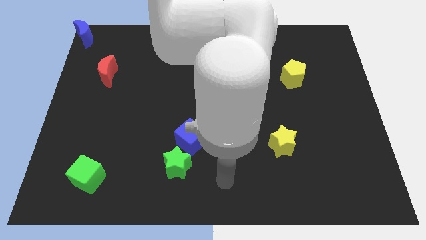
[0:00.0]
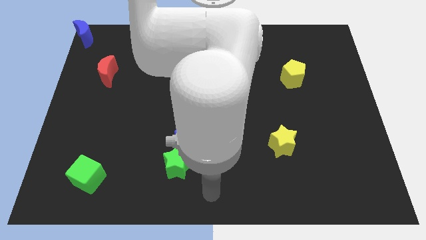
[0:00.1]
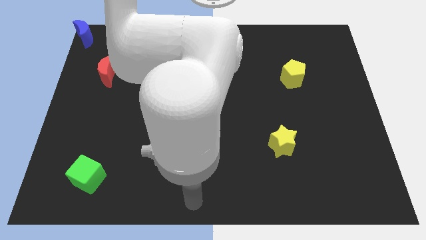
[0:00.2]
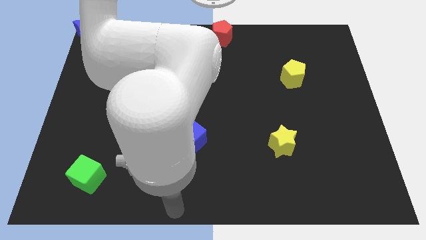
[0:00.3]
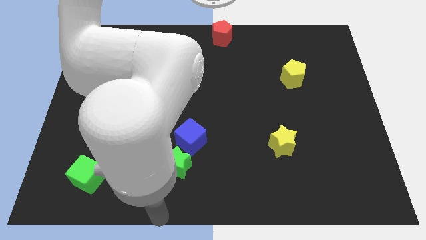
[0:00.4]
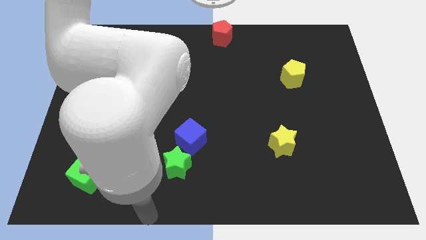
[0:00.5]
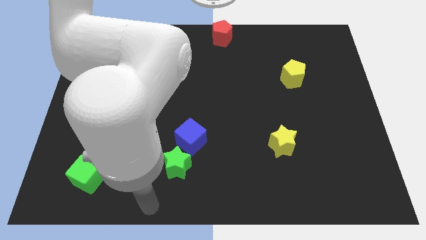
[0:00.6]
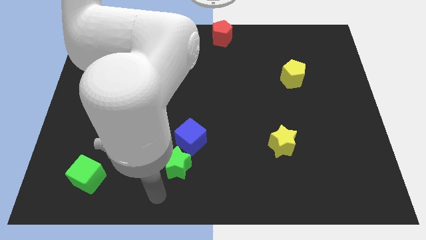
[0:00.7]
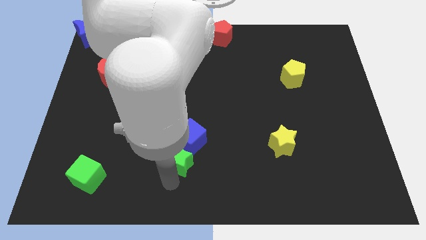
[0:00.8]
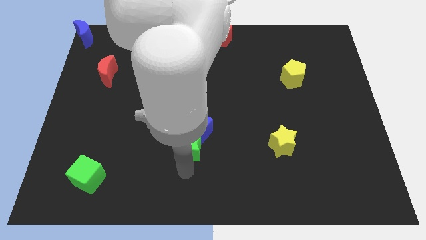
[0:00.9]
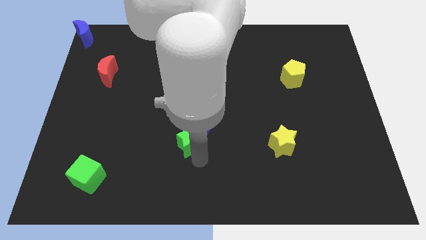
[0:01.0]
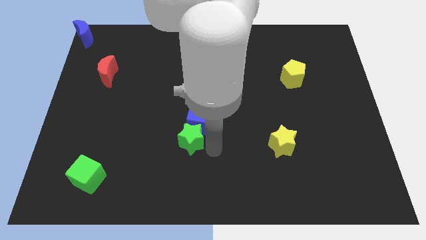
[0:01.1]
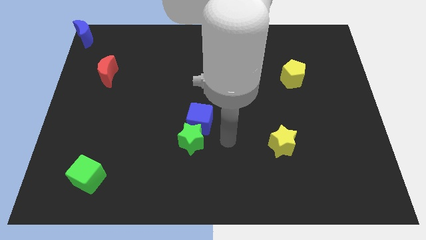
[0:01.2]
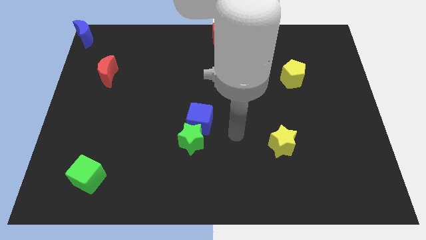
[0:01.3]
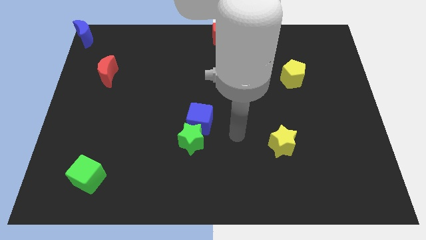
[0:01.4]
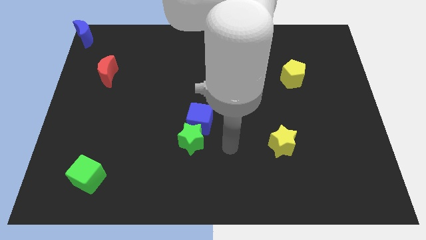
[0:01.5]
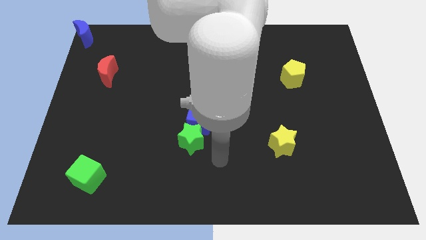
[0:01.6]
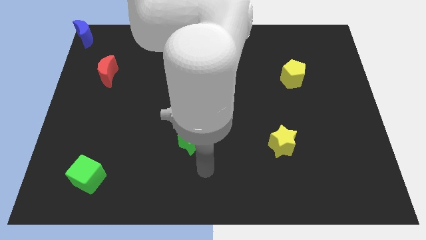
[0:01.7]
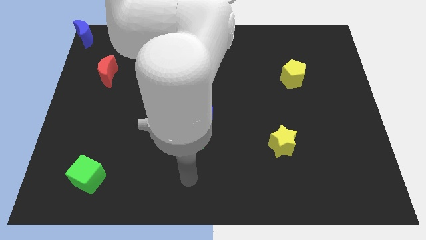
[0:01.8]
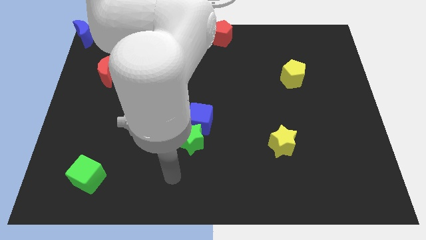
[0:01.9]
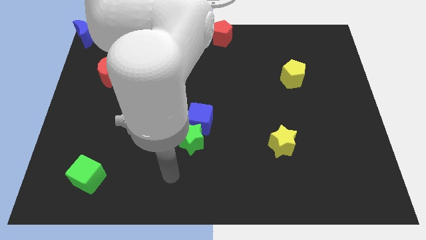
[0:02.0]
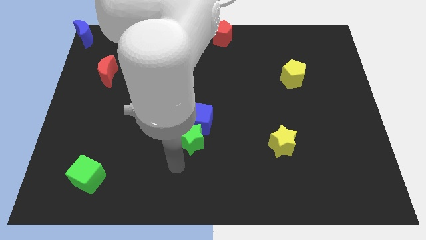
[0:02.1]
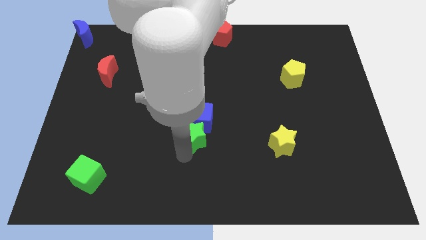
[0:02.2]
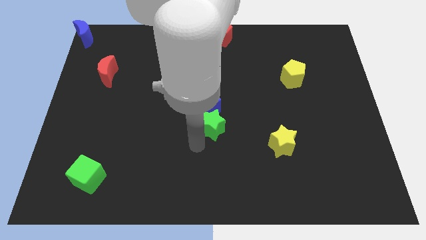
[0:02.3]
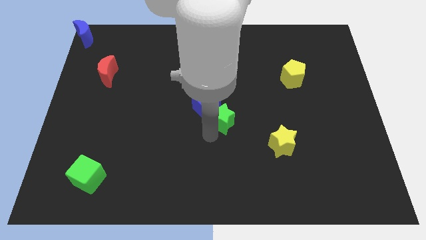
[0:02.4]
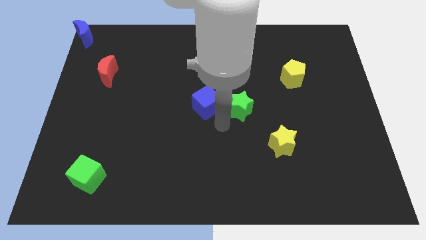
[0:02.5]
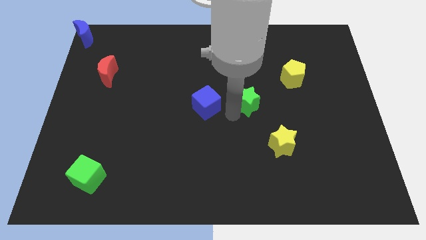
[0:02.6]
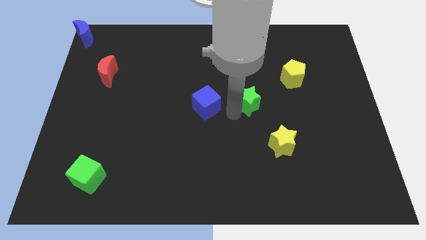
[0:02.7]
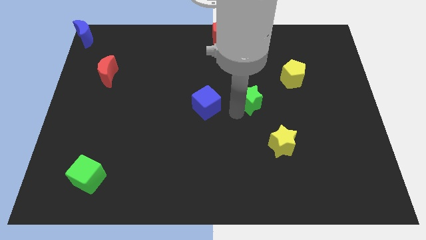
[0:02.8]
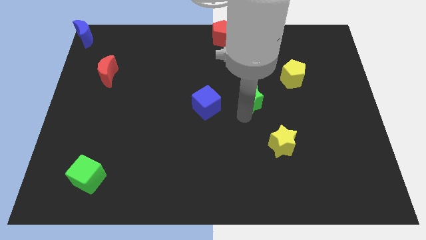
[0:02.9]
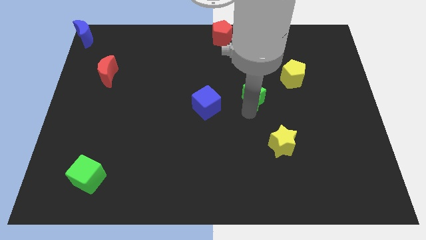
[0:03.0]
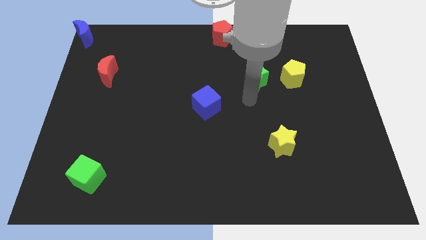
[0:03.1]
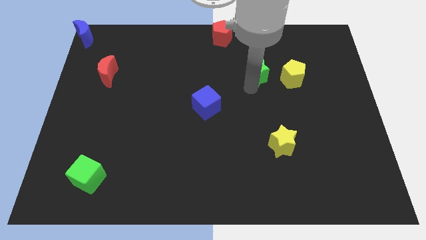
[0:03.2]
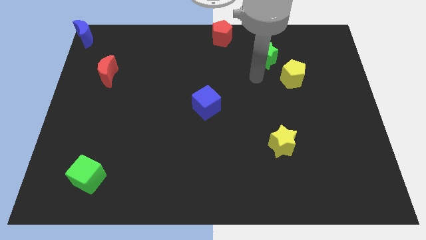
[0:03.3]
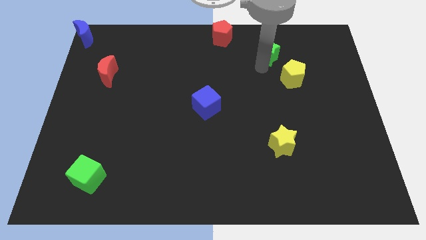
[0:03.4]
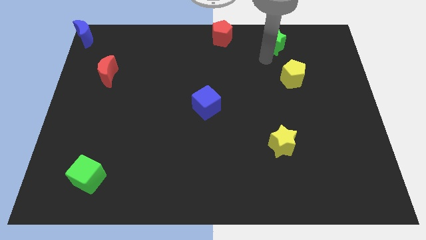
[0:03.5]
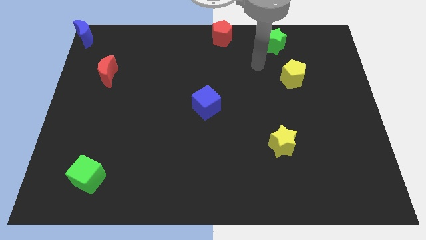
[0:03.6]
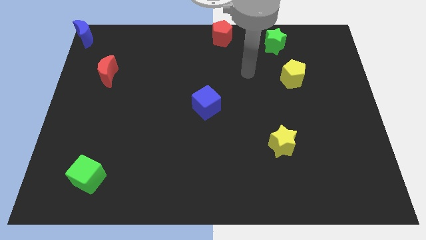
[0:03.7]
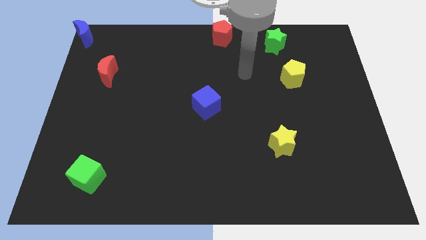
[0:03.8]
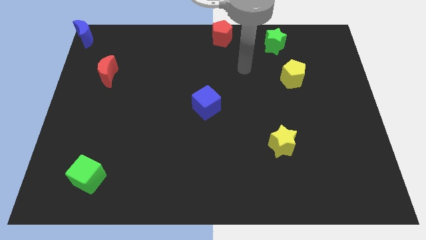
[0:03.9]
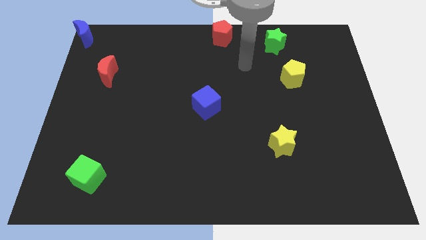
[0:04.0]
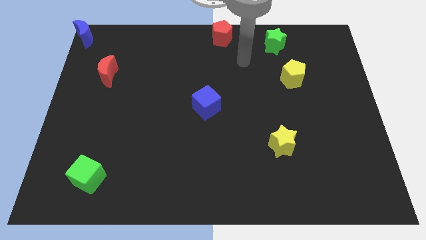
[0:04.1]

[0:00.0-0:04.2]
push green star towards the top right of board

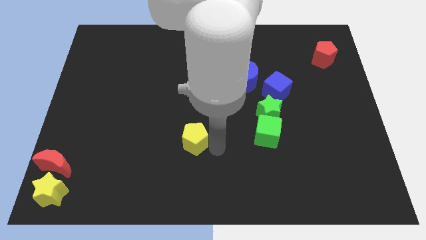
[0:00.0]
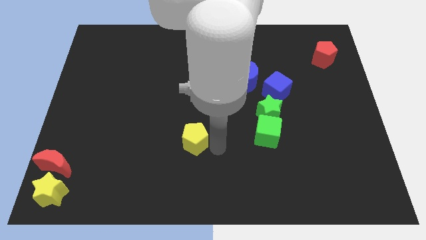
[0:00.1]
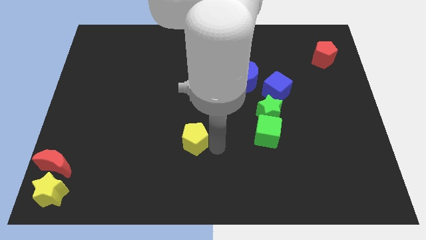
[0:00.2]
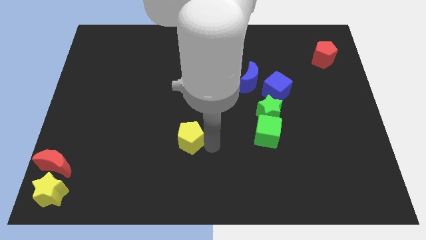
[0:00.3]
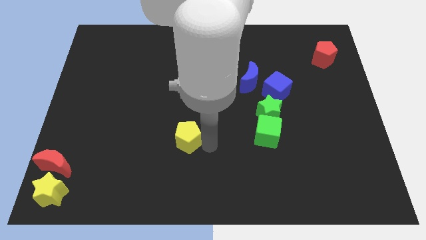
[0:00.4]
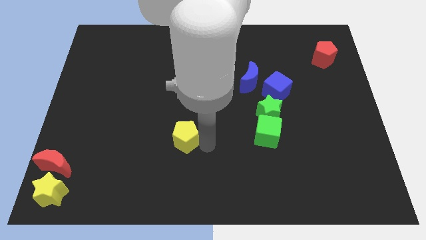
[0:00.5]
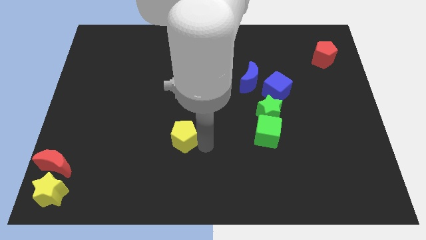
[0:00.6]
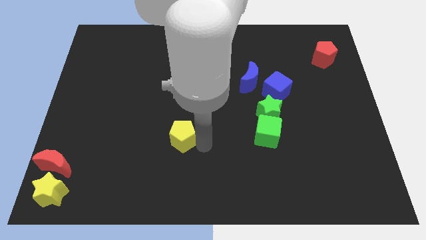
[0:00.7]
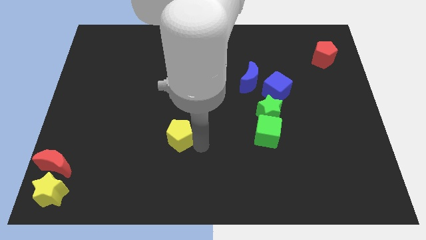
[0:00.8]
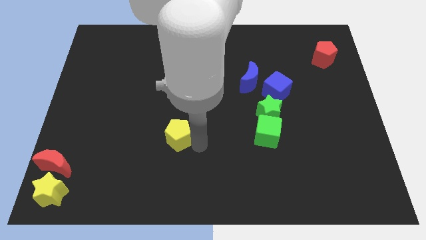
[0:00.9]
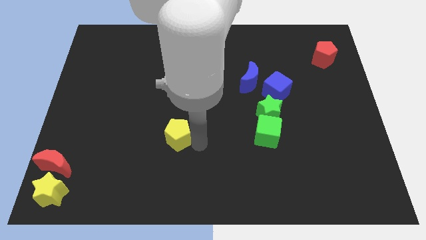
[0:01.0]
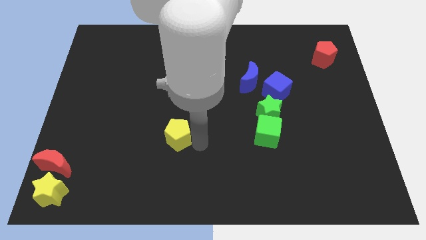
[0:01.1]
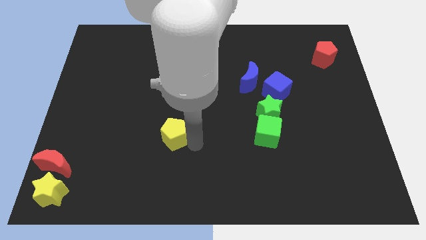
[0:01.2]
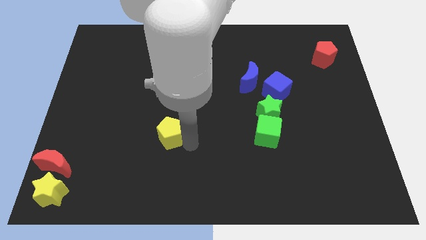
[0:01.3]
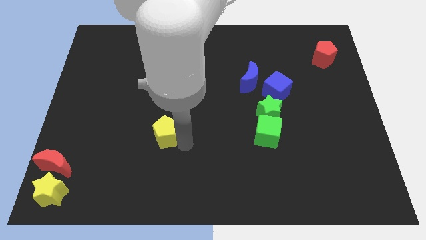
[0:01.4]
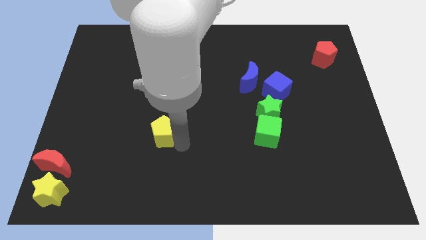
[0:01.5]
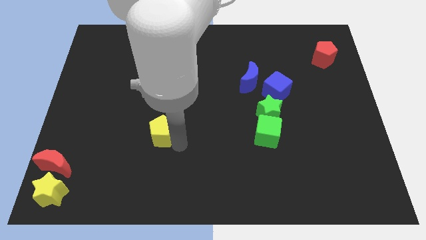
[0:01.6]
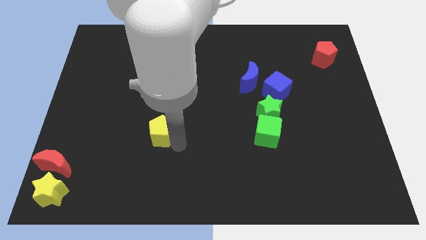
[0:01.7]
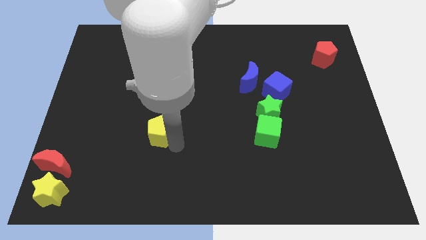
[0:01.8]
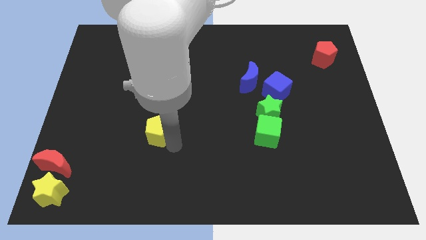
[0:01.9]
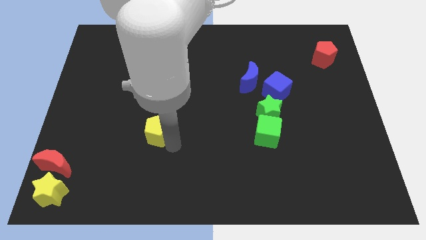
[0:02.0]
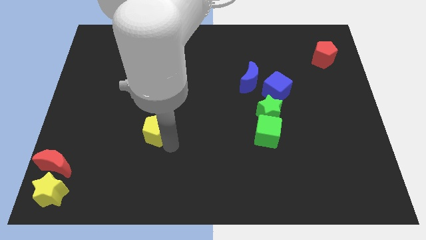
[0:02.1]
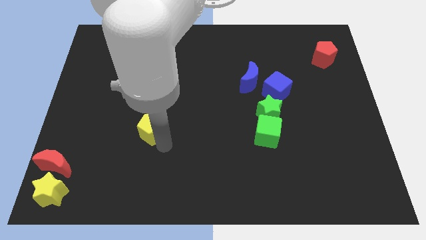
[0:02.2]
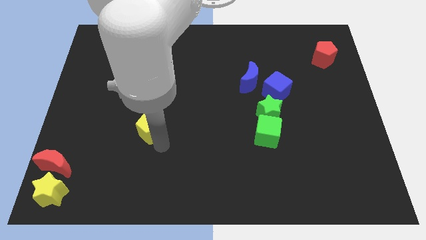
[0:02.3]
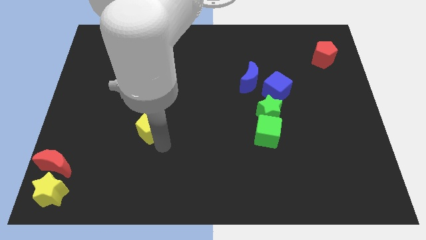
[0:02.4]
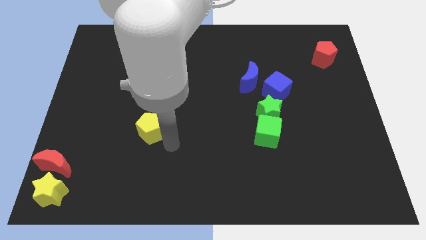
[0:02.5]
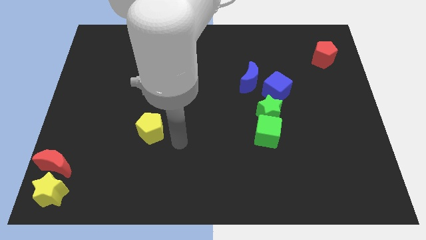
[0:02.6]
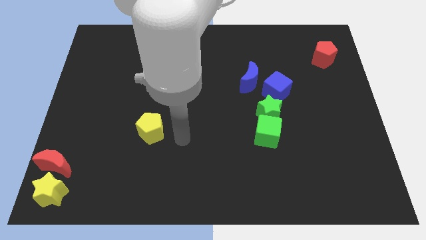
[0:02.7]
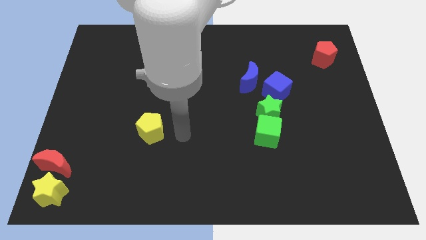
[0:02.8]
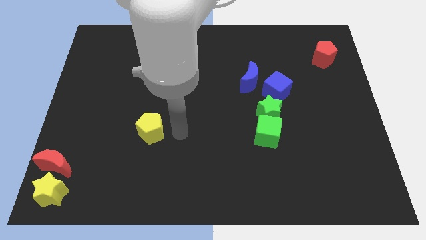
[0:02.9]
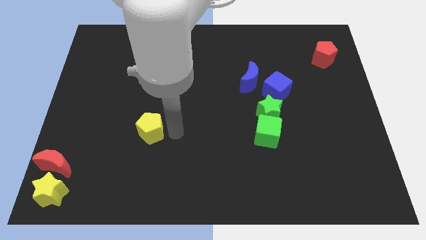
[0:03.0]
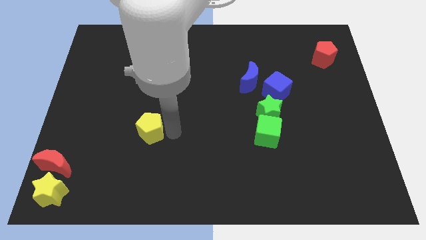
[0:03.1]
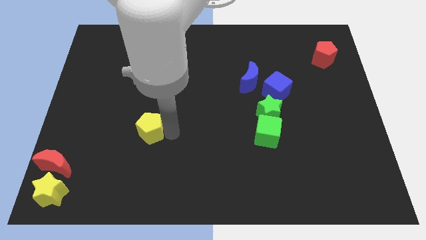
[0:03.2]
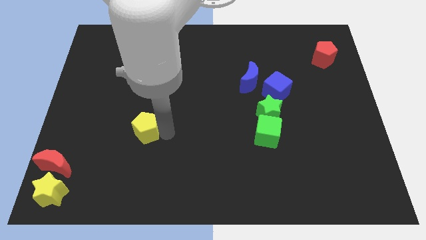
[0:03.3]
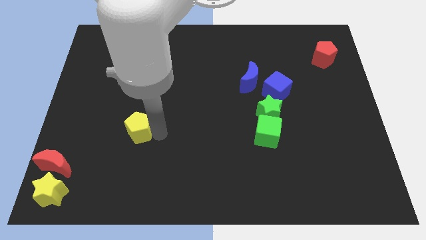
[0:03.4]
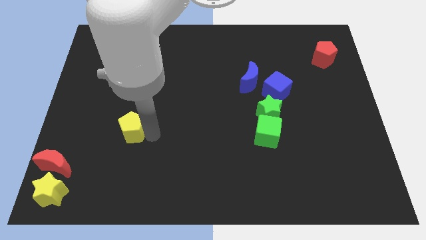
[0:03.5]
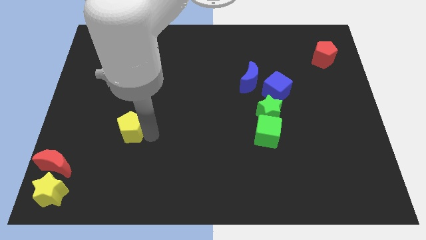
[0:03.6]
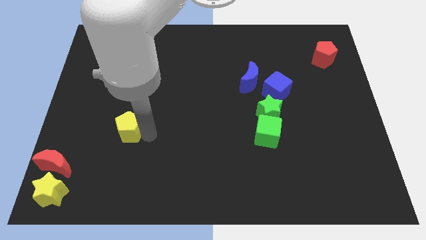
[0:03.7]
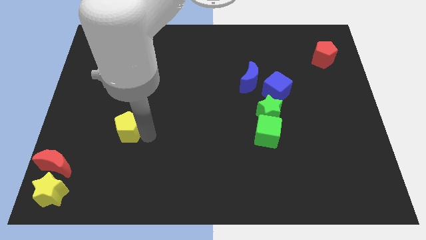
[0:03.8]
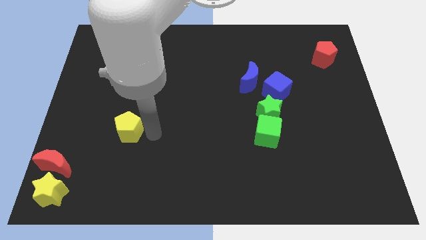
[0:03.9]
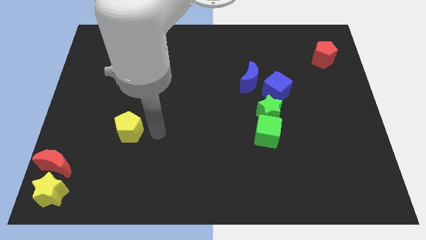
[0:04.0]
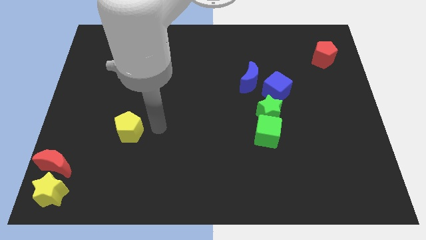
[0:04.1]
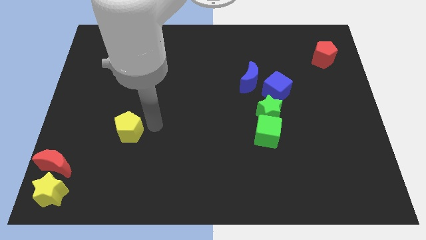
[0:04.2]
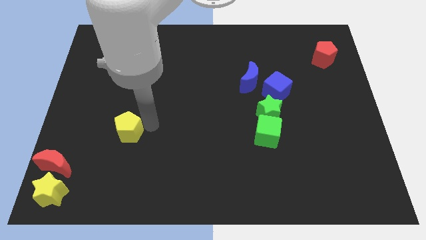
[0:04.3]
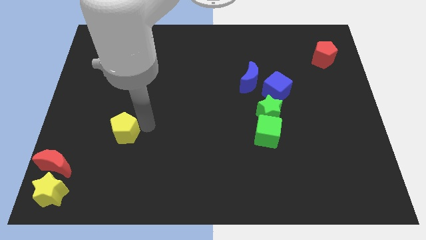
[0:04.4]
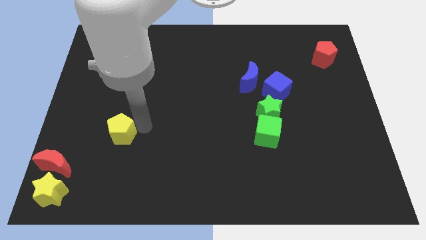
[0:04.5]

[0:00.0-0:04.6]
move yellow pentagon towards left side of the board

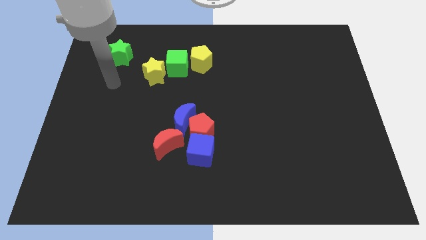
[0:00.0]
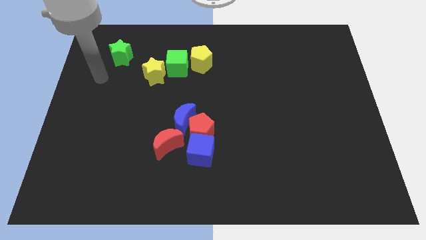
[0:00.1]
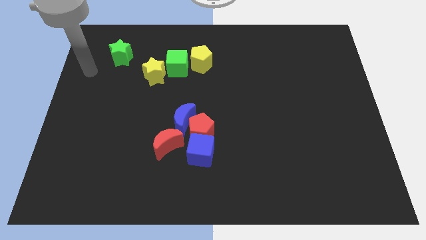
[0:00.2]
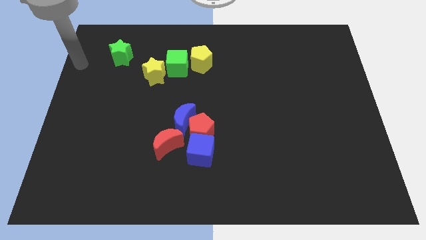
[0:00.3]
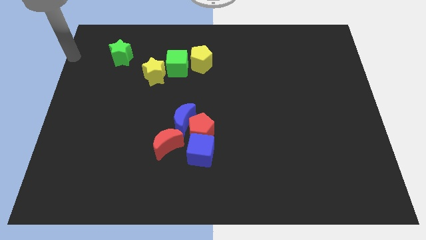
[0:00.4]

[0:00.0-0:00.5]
move the arm towards the top left
